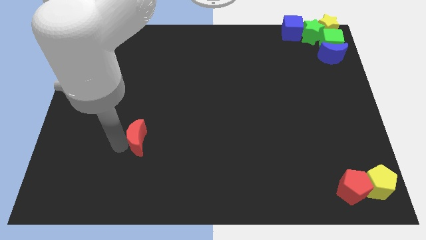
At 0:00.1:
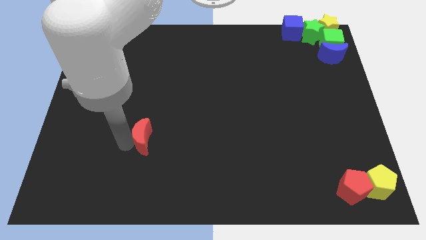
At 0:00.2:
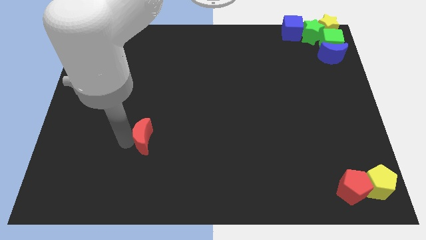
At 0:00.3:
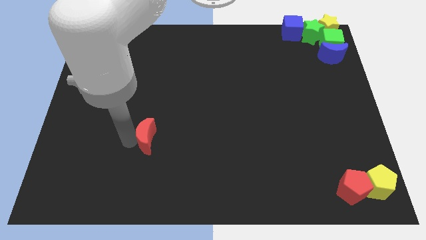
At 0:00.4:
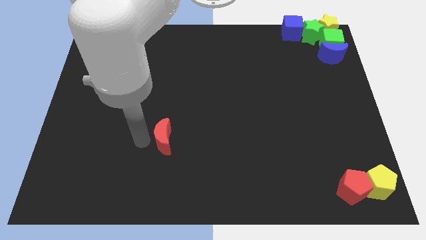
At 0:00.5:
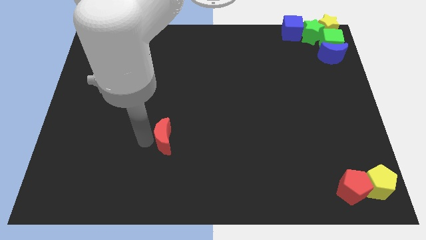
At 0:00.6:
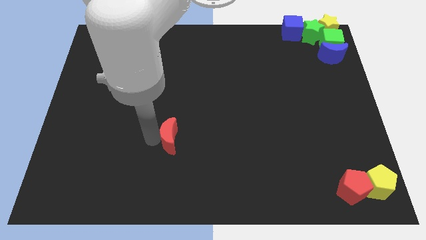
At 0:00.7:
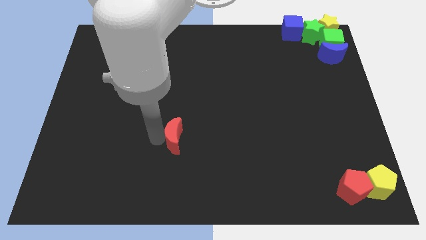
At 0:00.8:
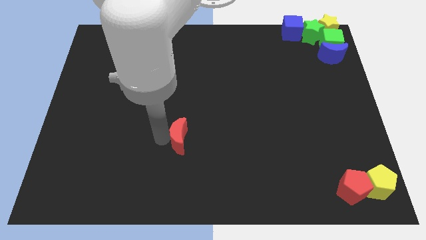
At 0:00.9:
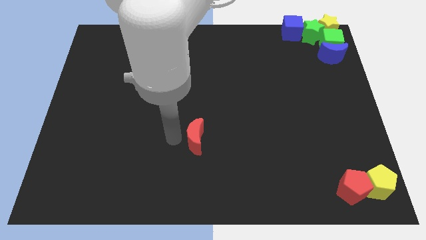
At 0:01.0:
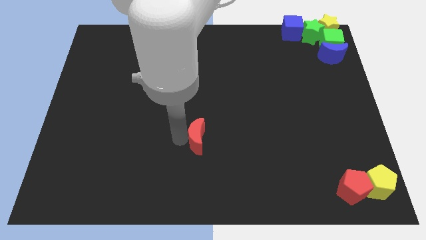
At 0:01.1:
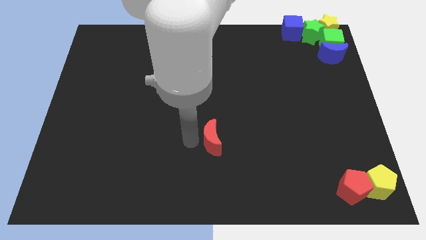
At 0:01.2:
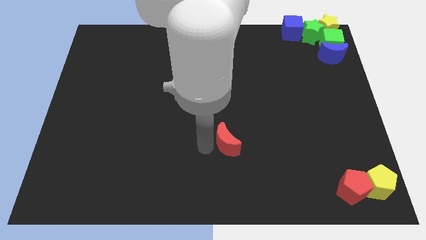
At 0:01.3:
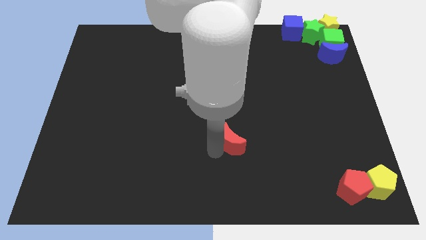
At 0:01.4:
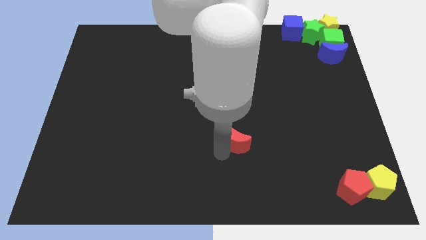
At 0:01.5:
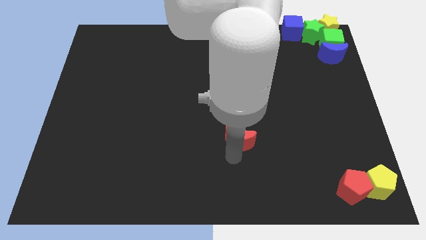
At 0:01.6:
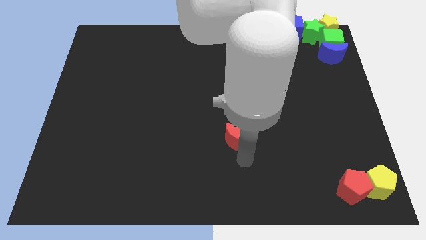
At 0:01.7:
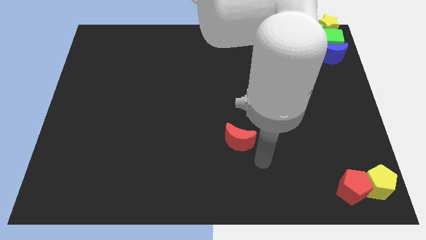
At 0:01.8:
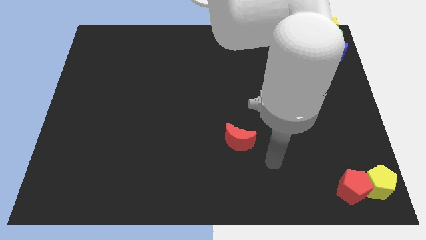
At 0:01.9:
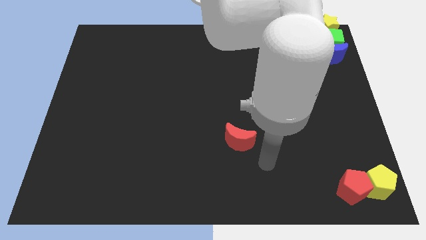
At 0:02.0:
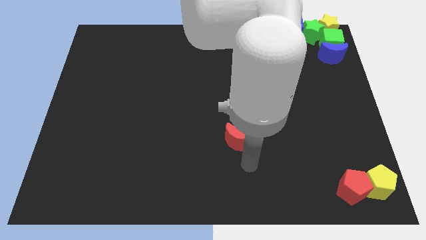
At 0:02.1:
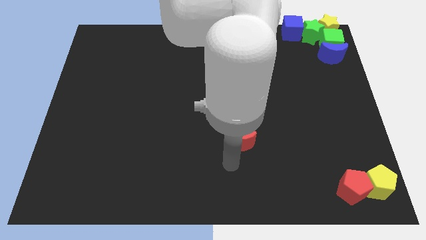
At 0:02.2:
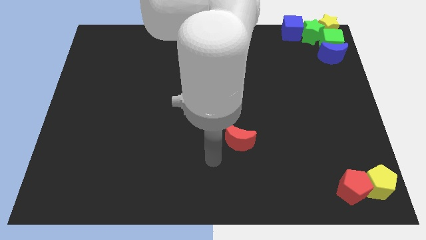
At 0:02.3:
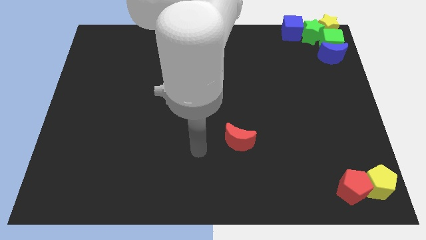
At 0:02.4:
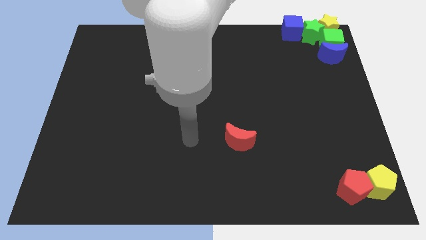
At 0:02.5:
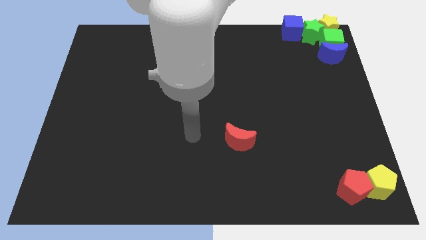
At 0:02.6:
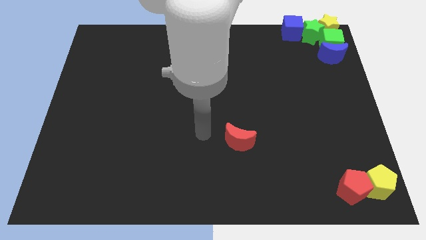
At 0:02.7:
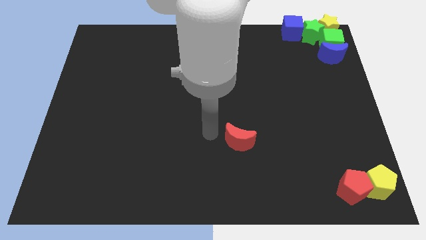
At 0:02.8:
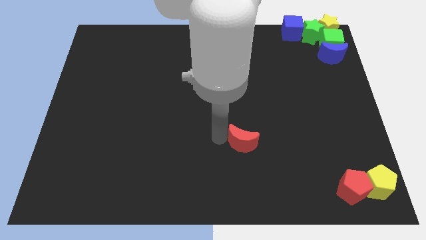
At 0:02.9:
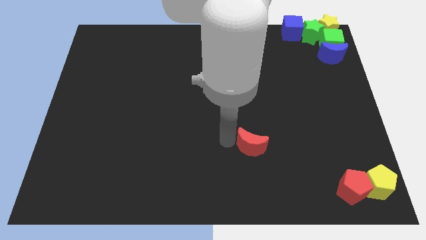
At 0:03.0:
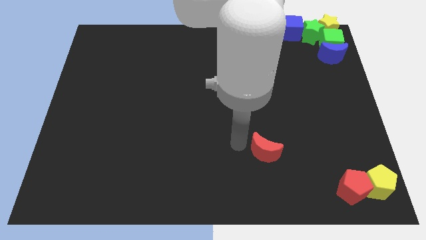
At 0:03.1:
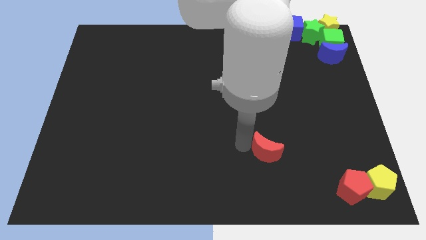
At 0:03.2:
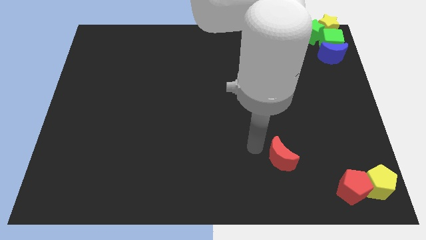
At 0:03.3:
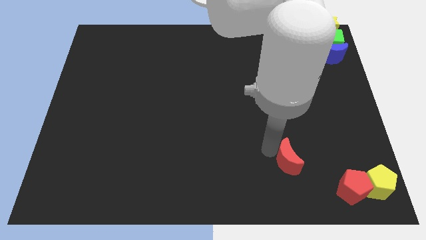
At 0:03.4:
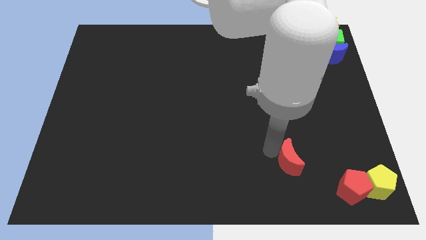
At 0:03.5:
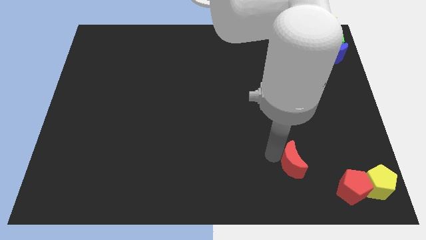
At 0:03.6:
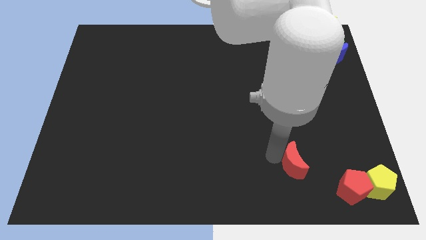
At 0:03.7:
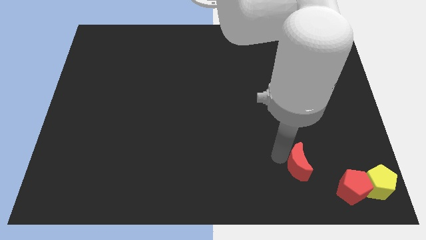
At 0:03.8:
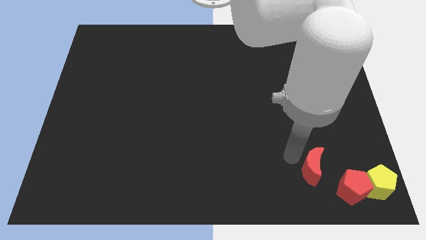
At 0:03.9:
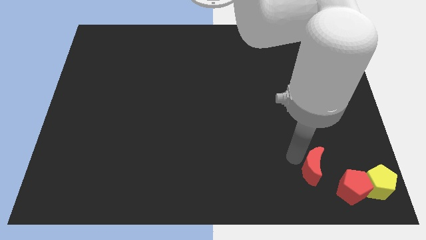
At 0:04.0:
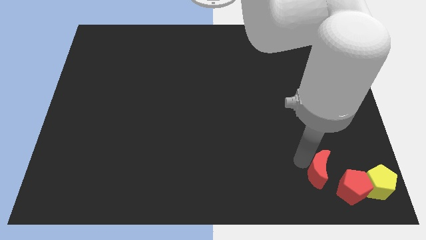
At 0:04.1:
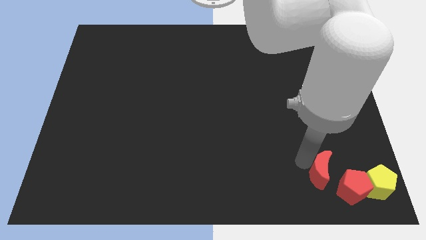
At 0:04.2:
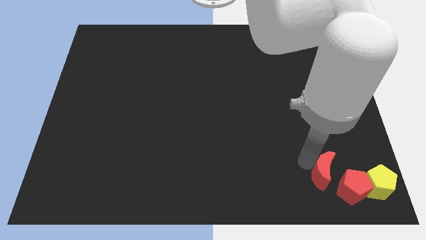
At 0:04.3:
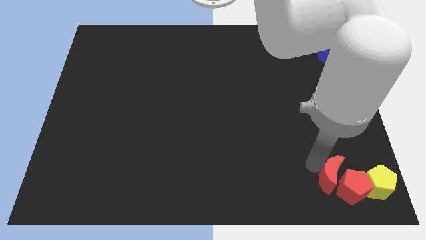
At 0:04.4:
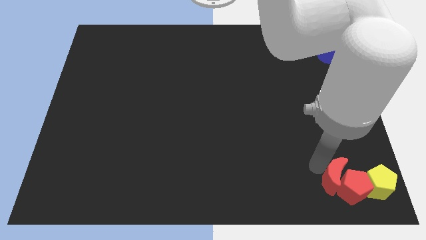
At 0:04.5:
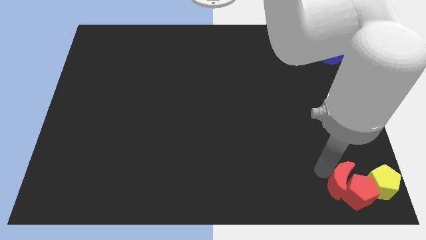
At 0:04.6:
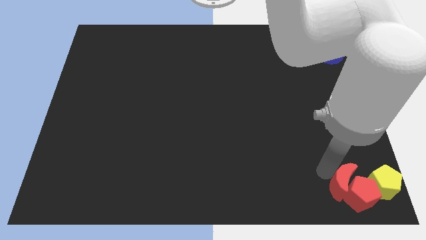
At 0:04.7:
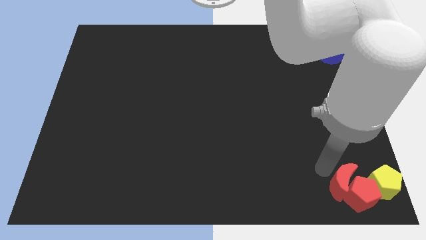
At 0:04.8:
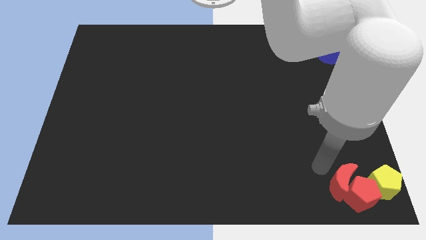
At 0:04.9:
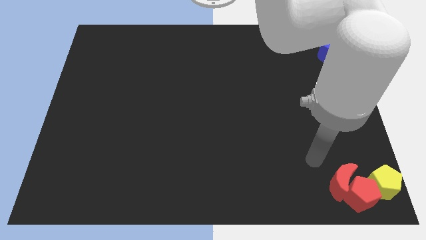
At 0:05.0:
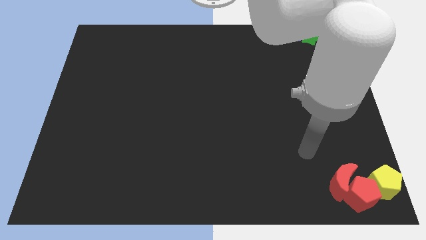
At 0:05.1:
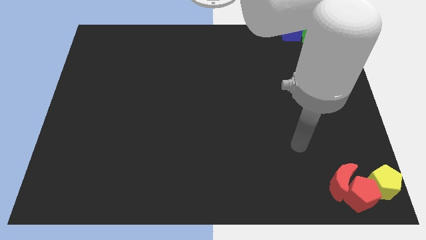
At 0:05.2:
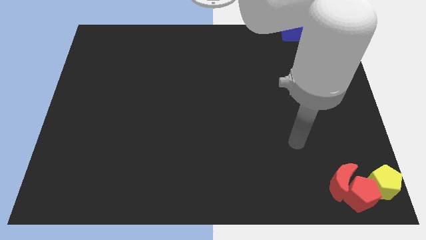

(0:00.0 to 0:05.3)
push the red crescent into the red pentagon

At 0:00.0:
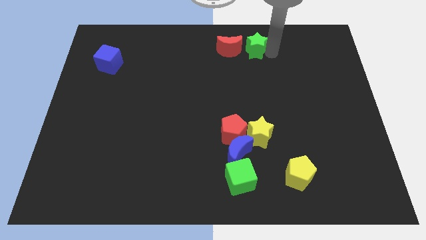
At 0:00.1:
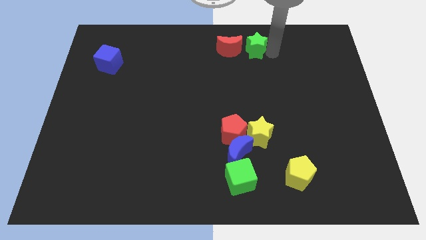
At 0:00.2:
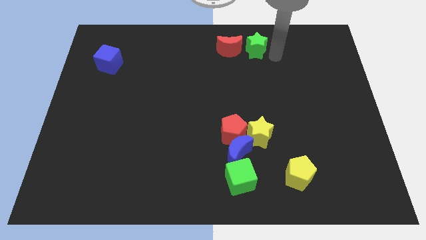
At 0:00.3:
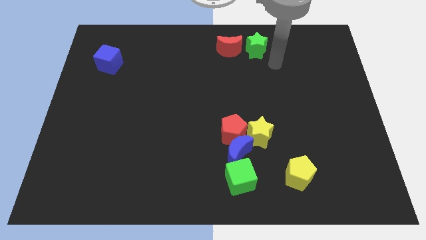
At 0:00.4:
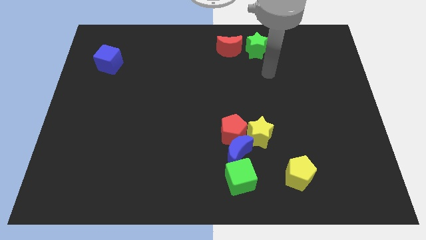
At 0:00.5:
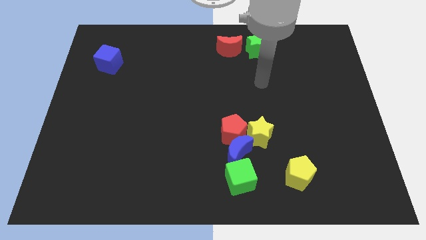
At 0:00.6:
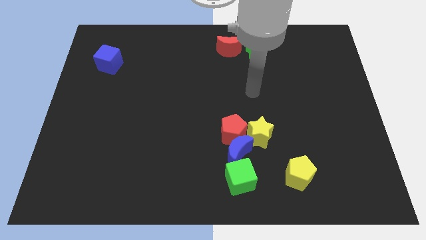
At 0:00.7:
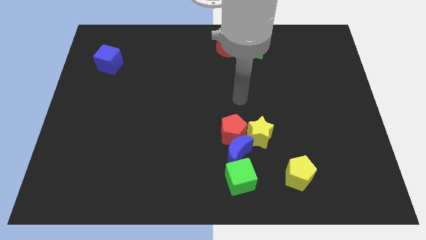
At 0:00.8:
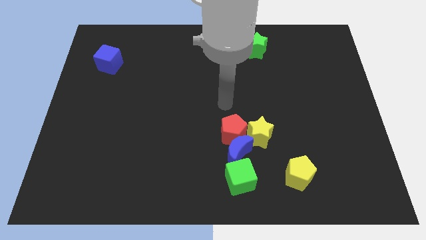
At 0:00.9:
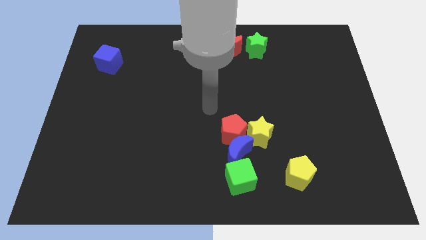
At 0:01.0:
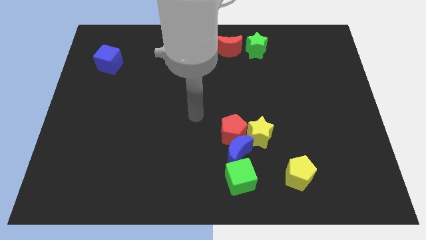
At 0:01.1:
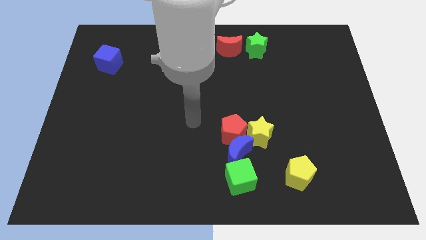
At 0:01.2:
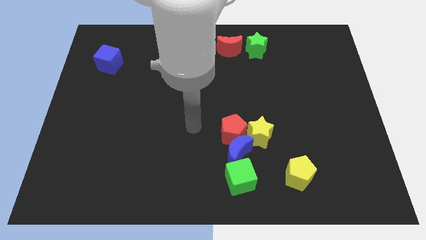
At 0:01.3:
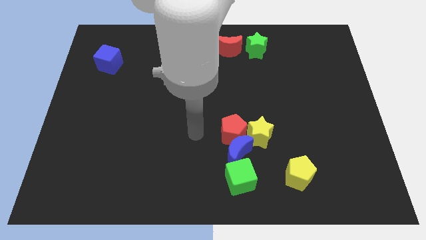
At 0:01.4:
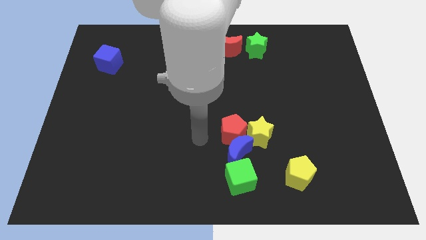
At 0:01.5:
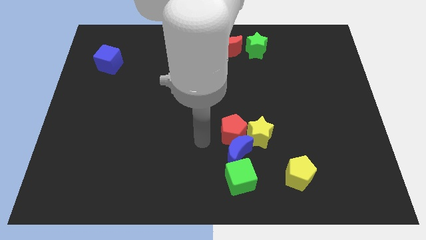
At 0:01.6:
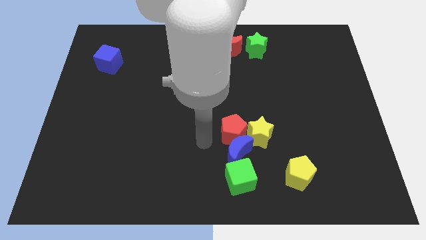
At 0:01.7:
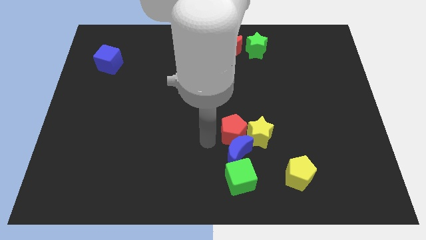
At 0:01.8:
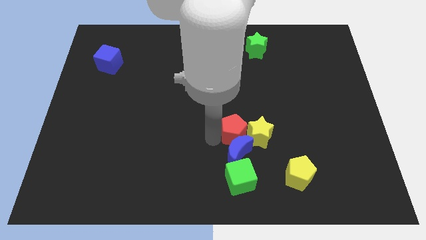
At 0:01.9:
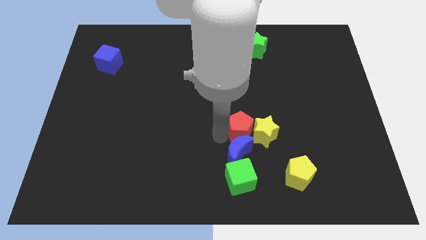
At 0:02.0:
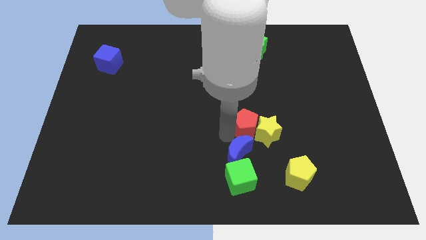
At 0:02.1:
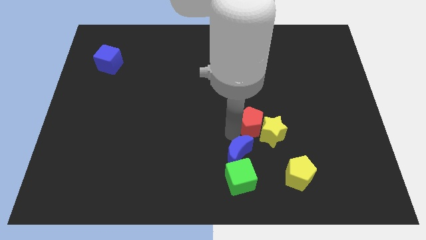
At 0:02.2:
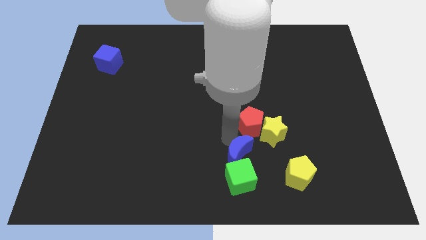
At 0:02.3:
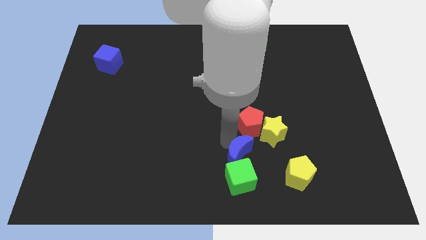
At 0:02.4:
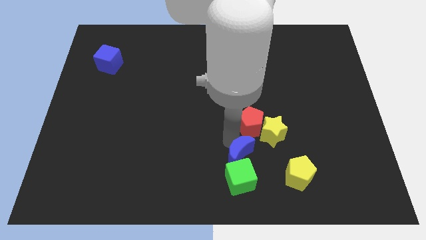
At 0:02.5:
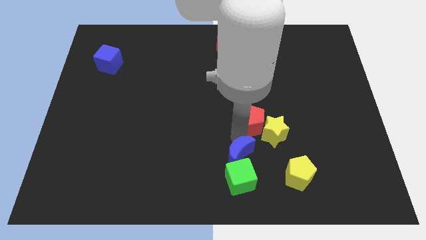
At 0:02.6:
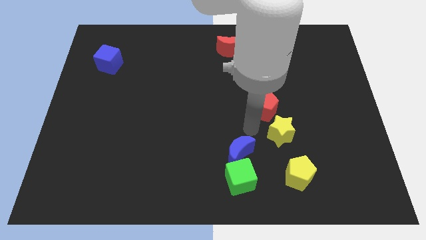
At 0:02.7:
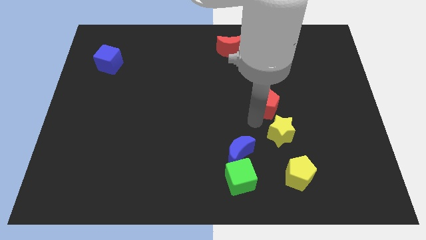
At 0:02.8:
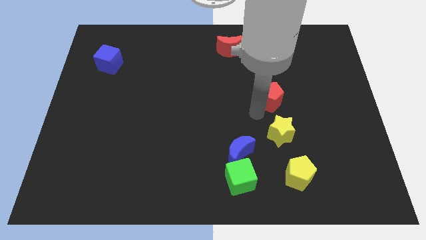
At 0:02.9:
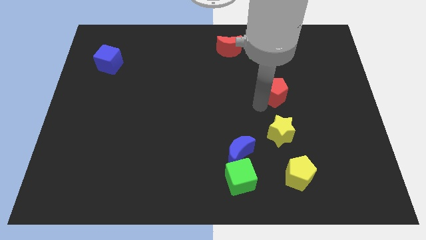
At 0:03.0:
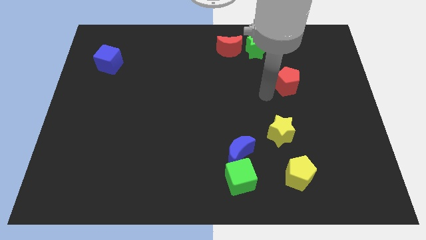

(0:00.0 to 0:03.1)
separate red pentagon from yellow star

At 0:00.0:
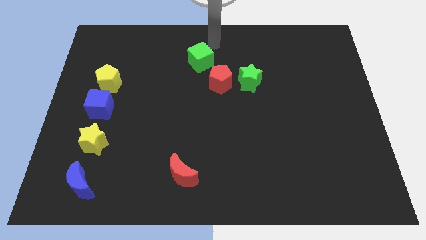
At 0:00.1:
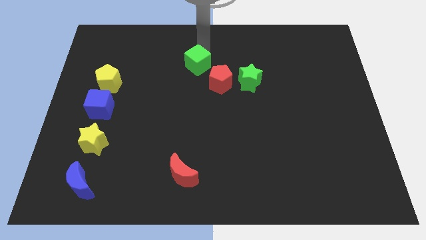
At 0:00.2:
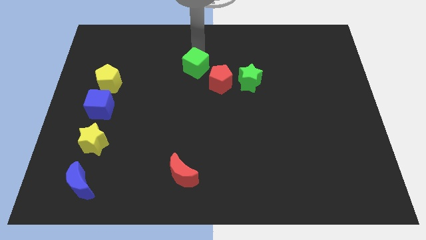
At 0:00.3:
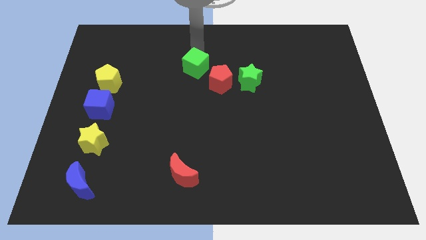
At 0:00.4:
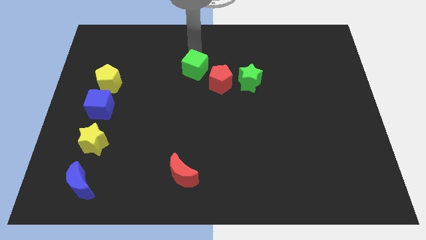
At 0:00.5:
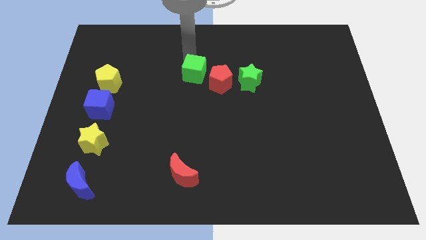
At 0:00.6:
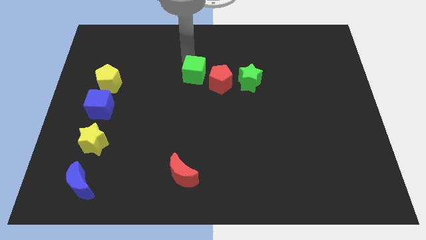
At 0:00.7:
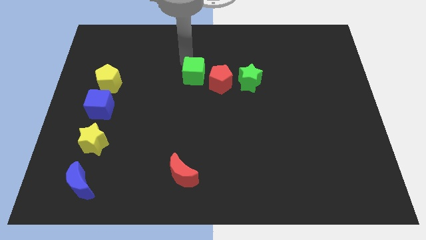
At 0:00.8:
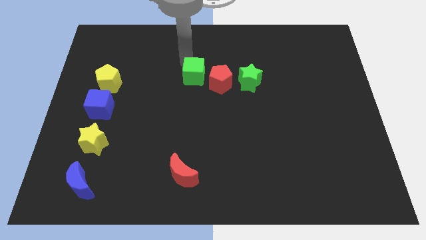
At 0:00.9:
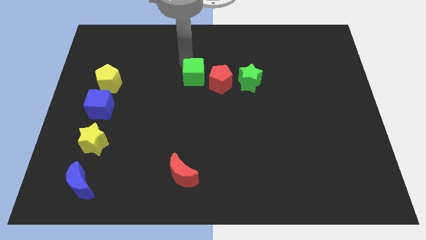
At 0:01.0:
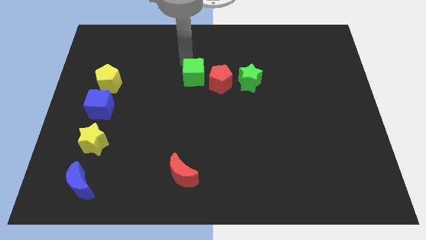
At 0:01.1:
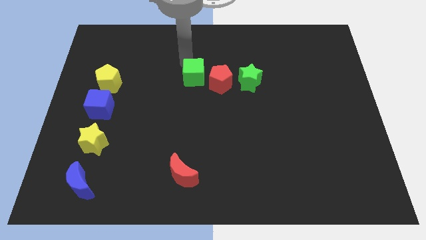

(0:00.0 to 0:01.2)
place the green cube left to the red pentagon
